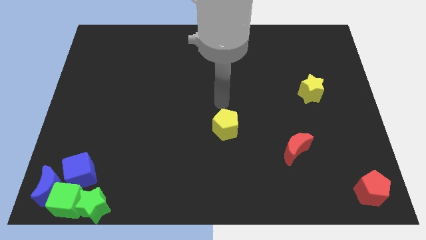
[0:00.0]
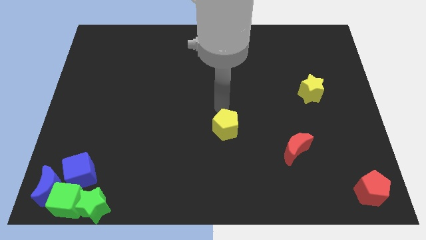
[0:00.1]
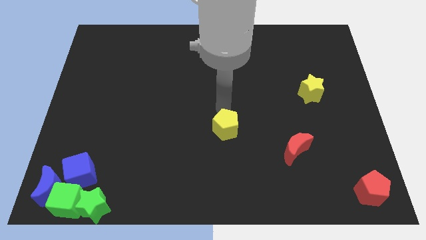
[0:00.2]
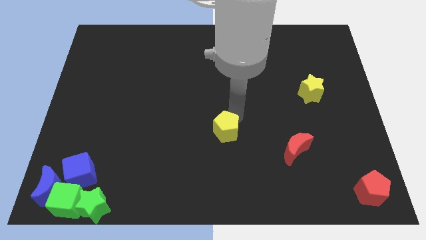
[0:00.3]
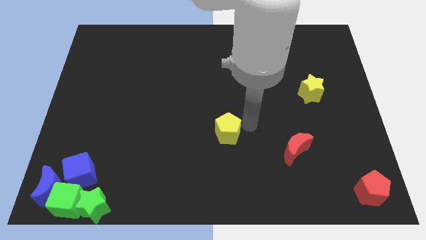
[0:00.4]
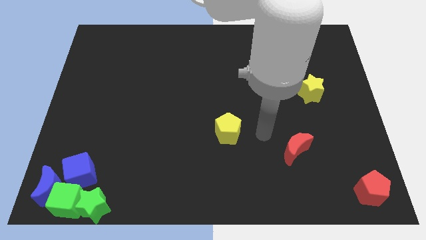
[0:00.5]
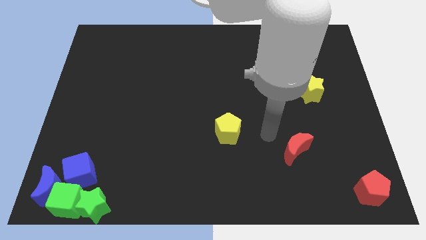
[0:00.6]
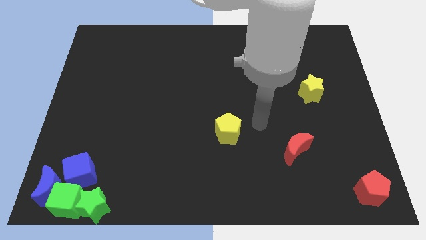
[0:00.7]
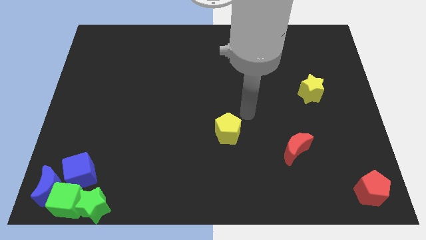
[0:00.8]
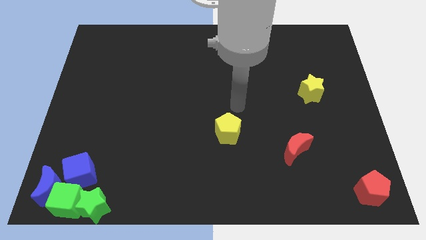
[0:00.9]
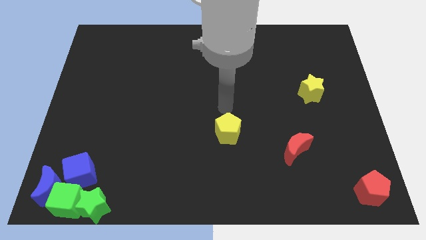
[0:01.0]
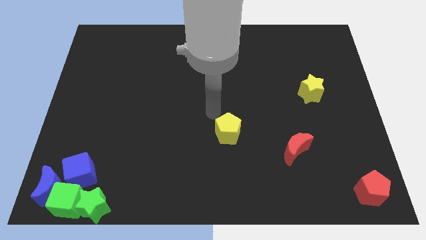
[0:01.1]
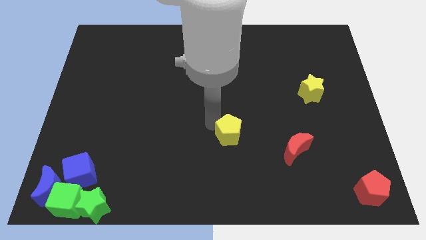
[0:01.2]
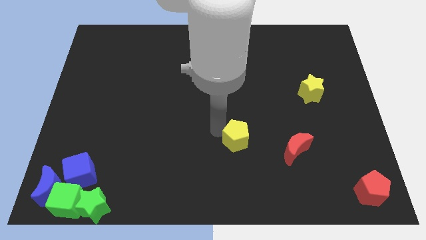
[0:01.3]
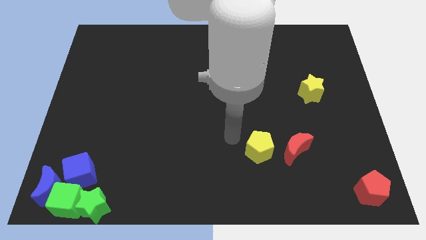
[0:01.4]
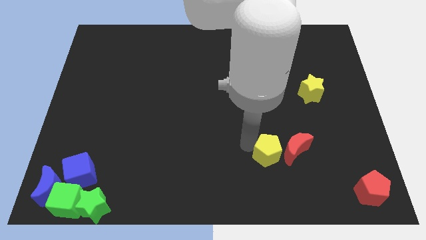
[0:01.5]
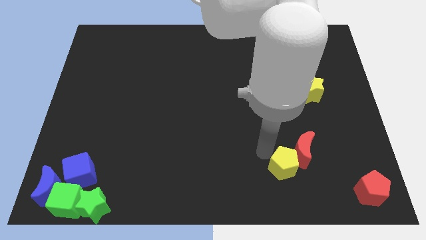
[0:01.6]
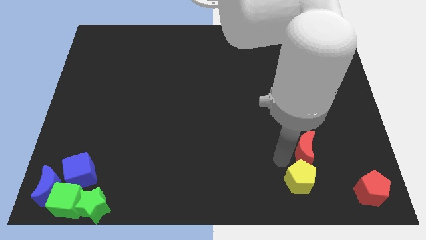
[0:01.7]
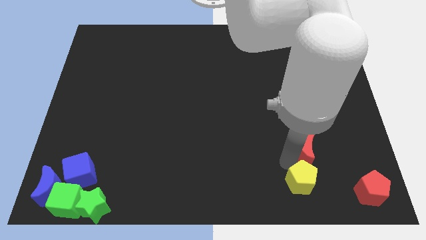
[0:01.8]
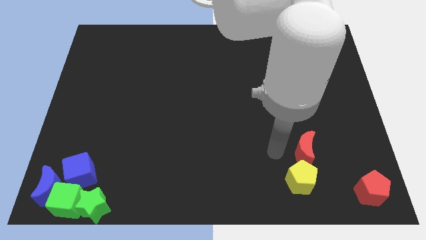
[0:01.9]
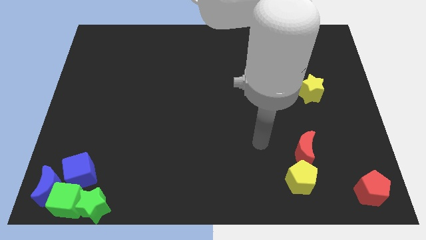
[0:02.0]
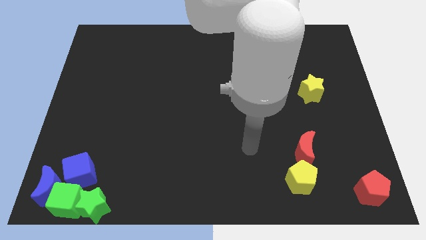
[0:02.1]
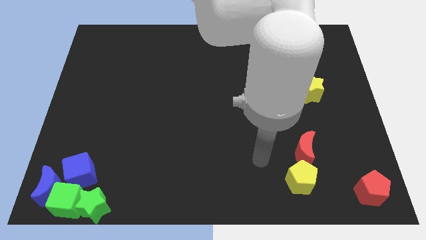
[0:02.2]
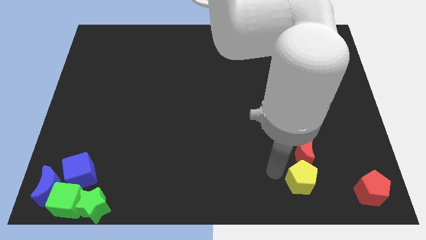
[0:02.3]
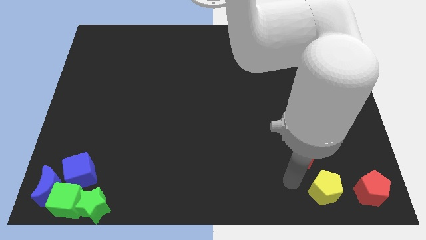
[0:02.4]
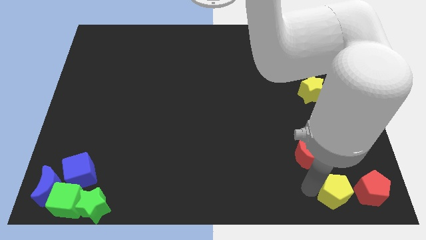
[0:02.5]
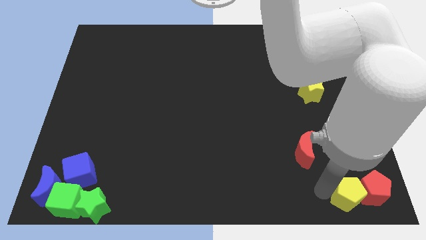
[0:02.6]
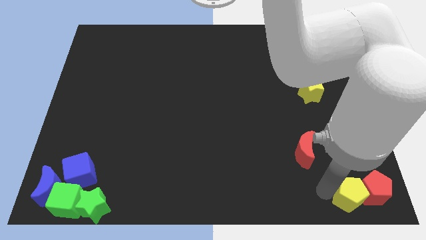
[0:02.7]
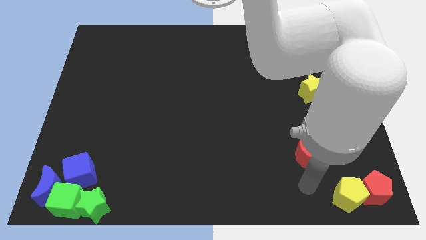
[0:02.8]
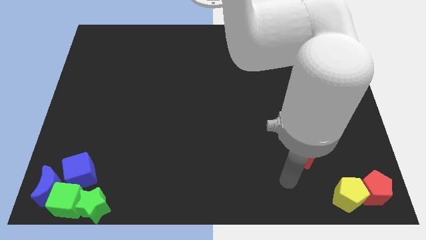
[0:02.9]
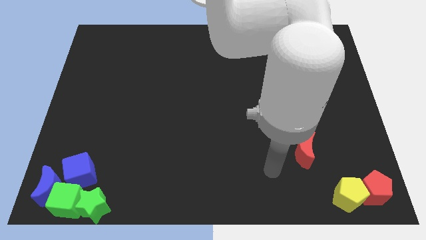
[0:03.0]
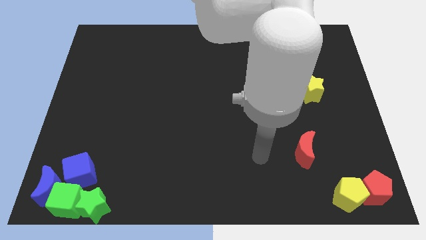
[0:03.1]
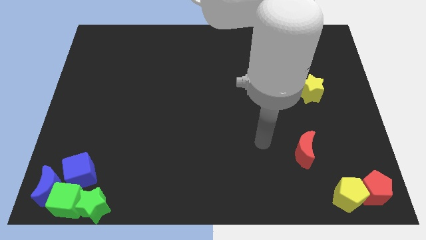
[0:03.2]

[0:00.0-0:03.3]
push the yellow pentagon into the red pentagon

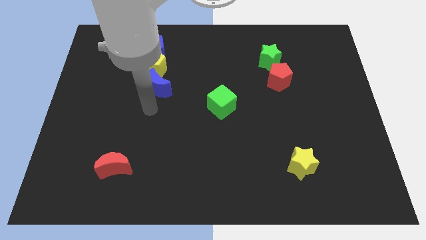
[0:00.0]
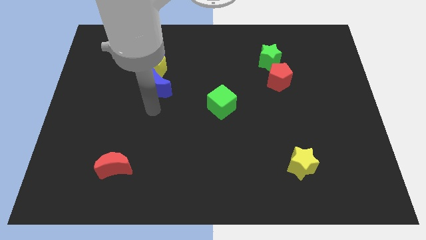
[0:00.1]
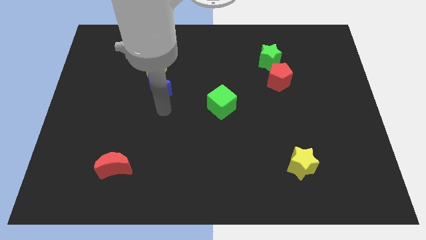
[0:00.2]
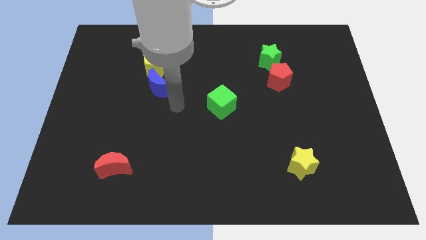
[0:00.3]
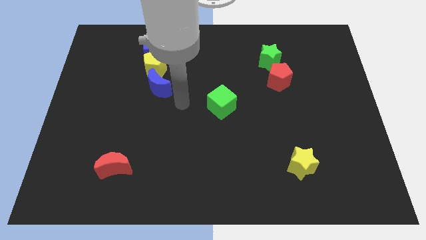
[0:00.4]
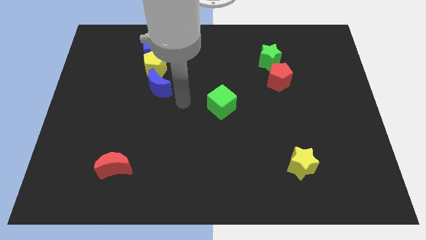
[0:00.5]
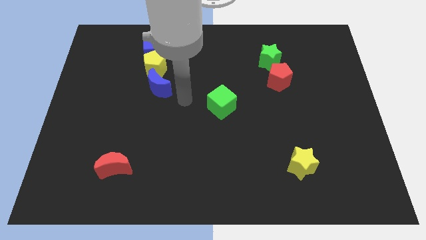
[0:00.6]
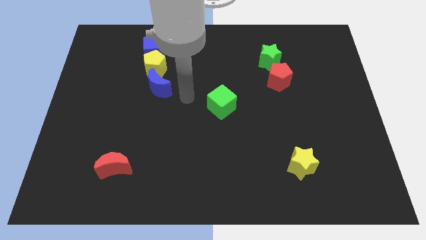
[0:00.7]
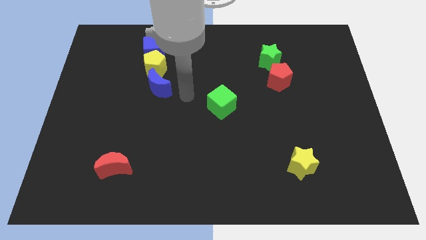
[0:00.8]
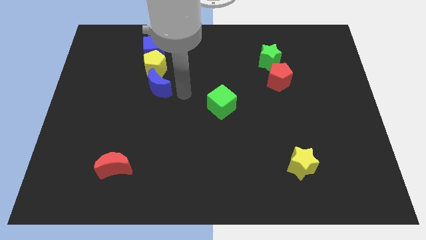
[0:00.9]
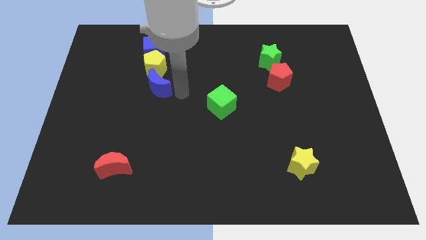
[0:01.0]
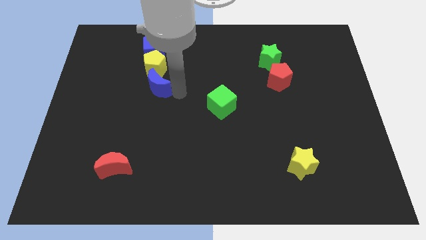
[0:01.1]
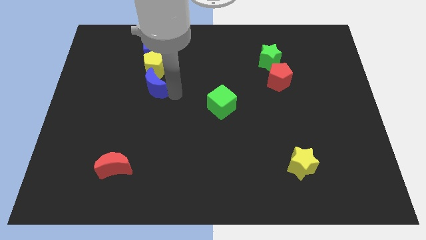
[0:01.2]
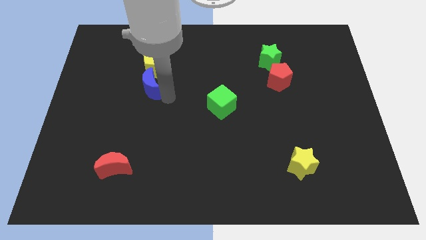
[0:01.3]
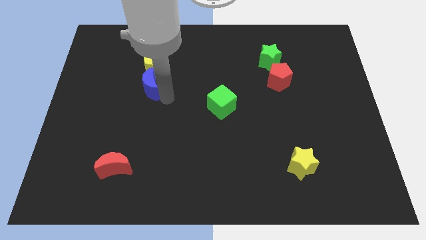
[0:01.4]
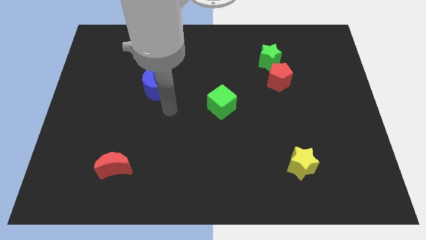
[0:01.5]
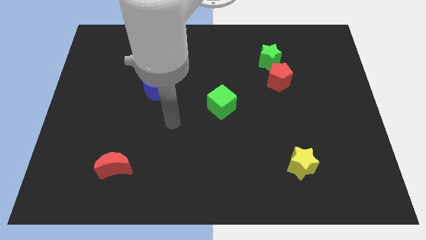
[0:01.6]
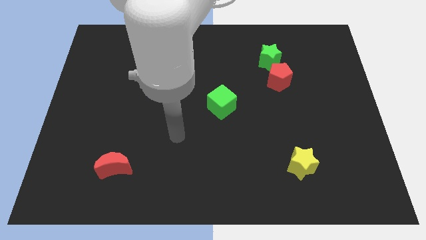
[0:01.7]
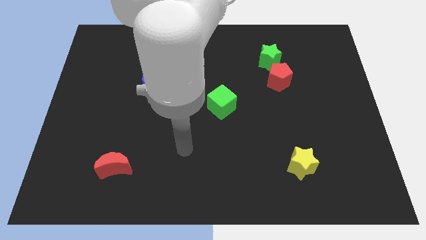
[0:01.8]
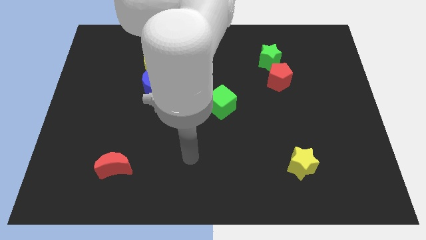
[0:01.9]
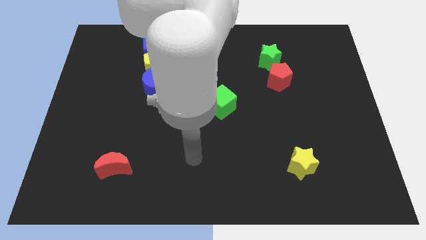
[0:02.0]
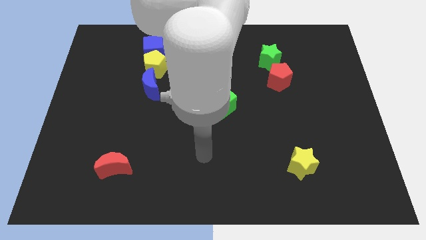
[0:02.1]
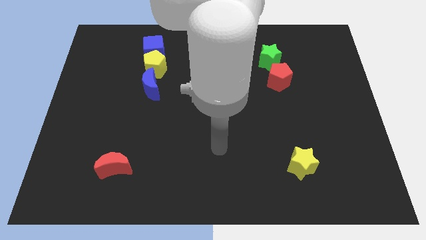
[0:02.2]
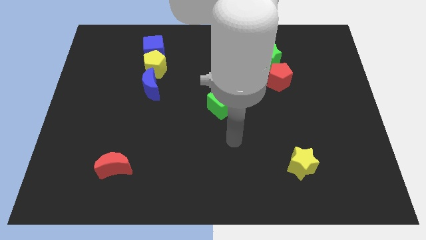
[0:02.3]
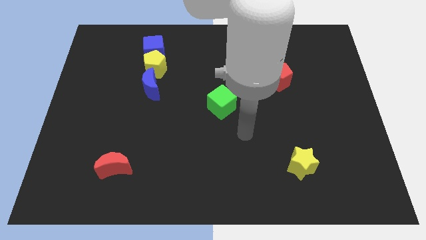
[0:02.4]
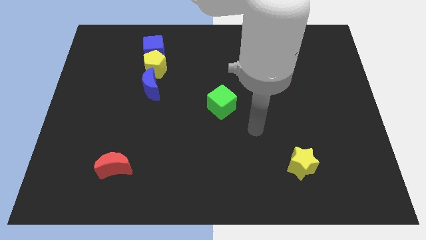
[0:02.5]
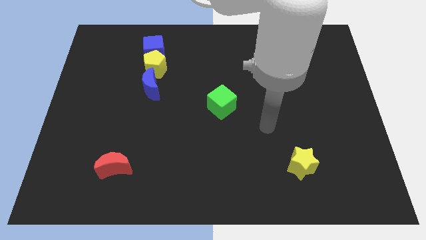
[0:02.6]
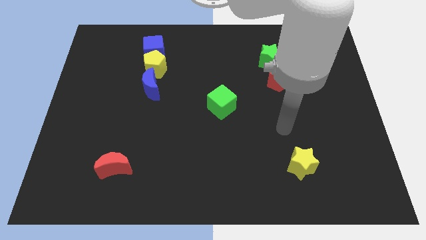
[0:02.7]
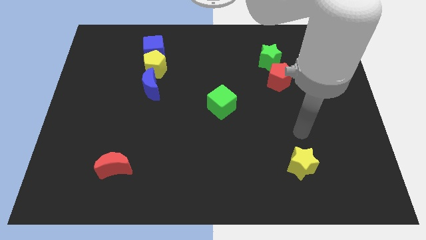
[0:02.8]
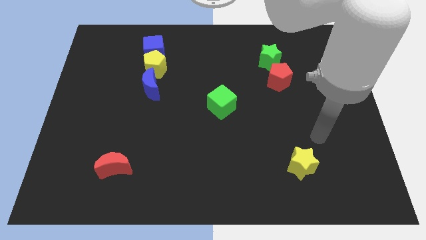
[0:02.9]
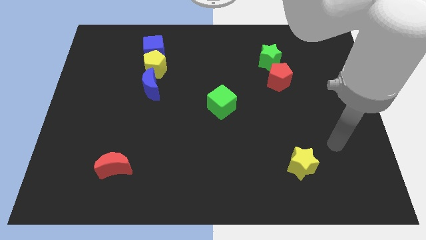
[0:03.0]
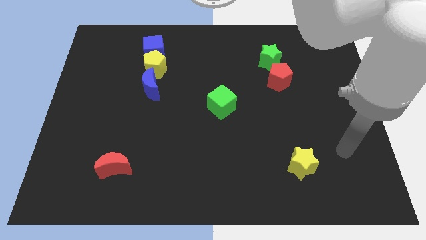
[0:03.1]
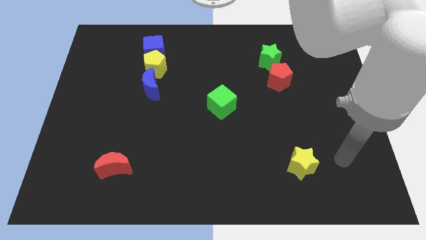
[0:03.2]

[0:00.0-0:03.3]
go and point your hand at the right side of the yellow star

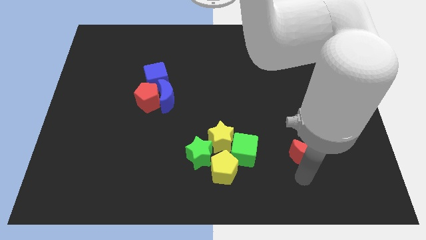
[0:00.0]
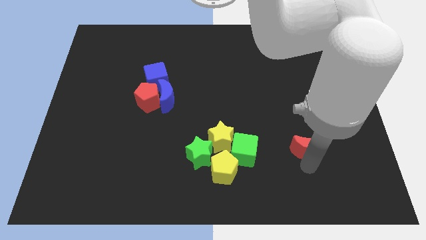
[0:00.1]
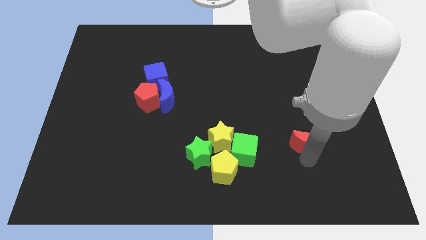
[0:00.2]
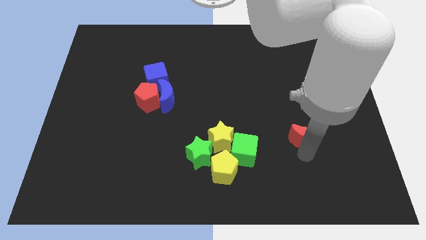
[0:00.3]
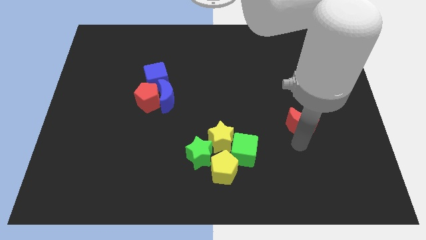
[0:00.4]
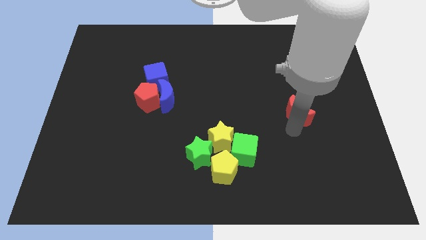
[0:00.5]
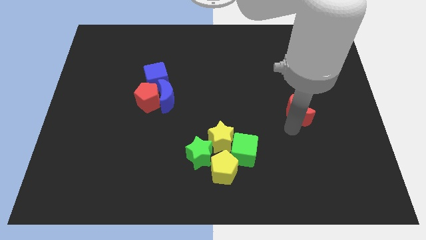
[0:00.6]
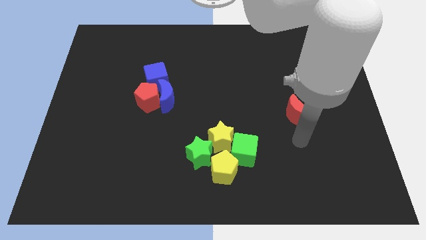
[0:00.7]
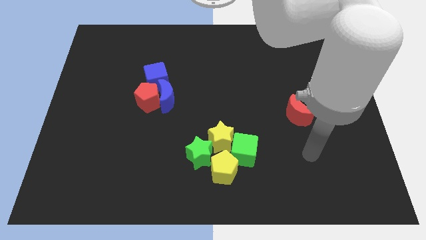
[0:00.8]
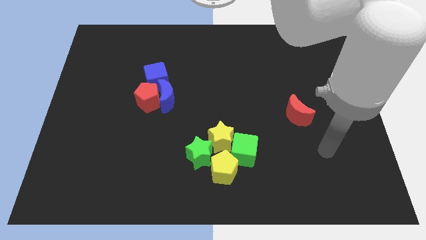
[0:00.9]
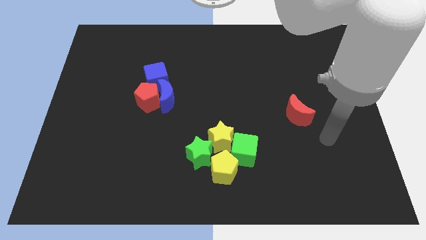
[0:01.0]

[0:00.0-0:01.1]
push the red pentagon slightly upwards

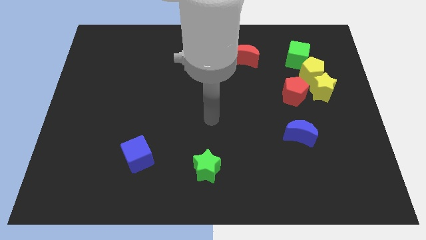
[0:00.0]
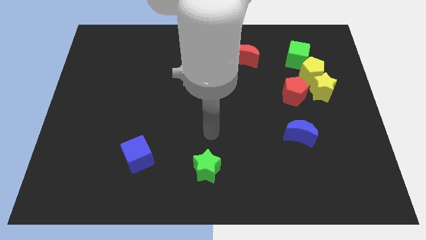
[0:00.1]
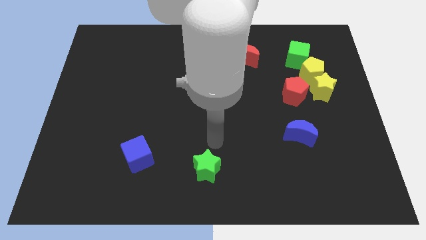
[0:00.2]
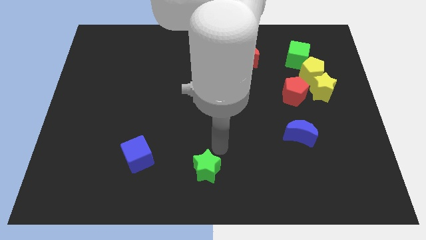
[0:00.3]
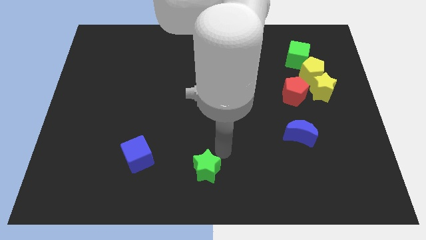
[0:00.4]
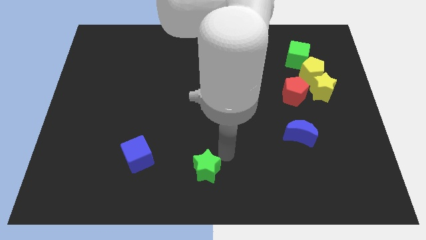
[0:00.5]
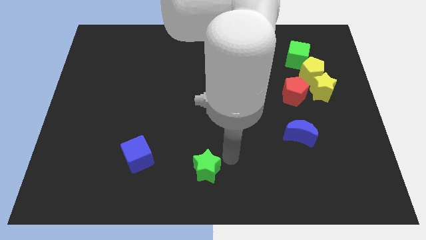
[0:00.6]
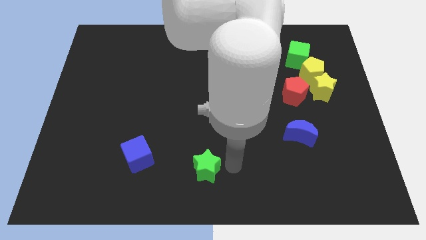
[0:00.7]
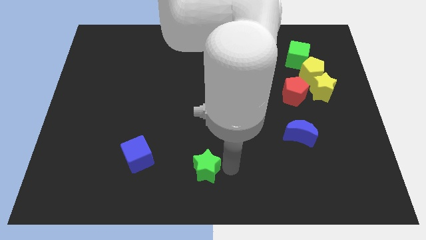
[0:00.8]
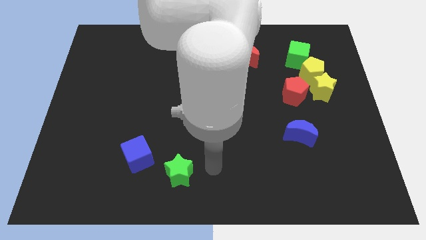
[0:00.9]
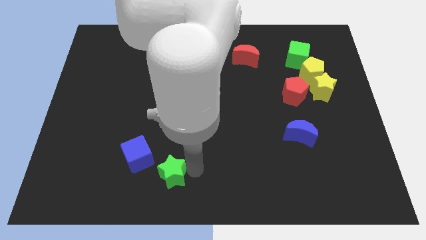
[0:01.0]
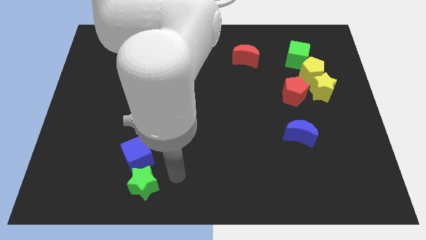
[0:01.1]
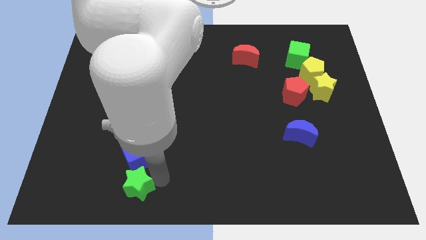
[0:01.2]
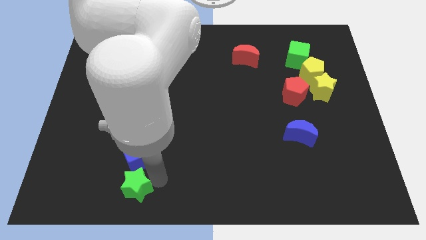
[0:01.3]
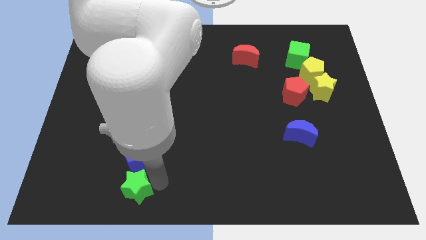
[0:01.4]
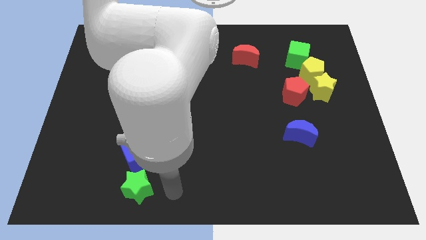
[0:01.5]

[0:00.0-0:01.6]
push the green star to the bottom of the blue cube
